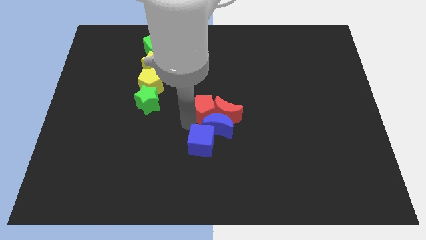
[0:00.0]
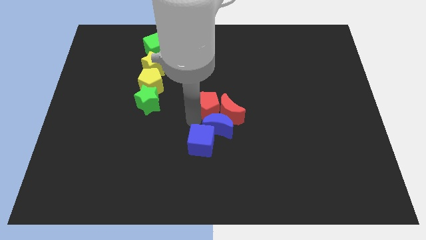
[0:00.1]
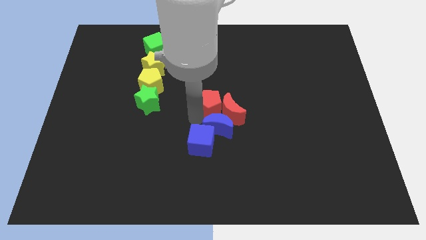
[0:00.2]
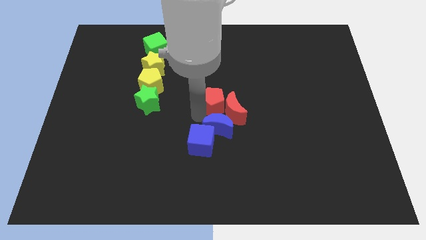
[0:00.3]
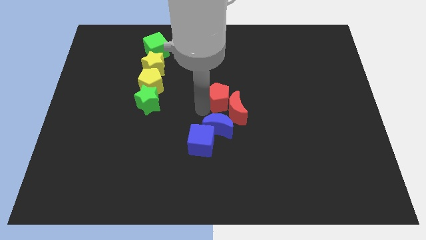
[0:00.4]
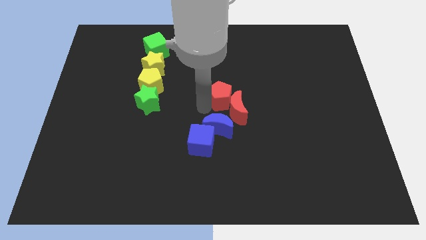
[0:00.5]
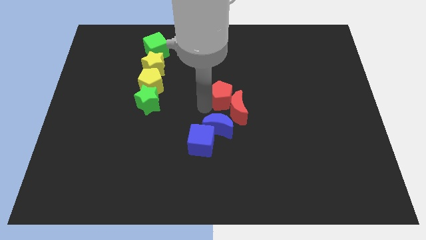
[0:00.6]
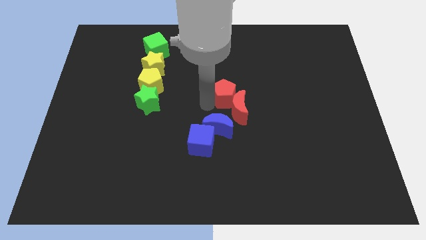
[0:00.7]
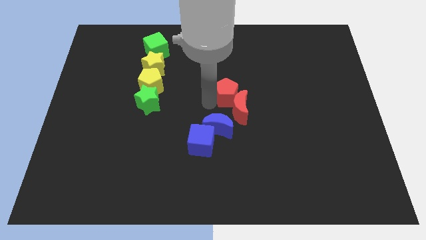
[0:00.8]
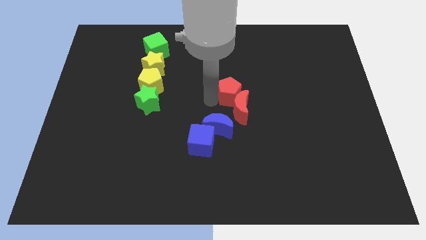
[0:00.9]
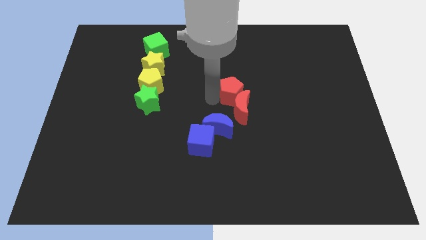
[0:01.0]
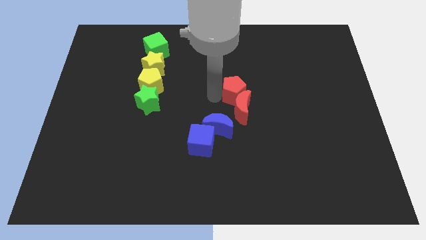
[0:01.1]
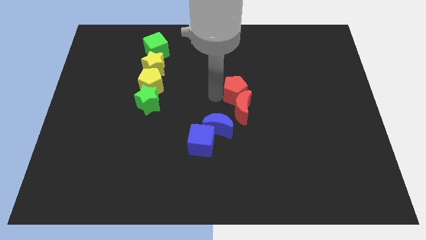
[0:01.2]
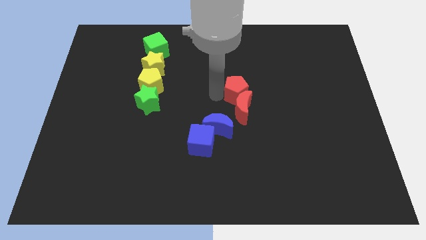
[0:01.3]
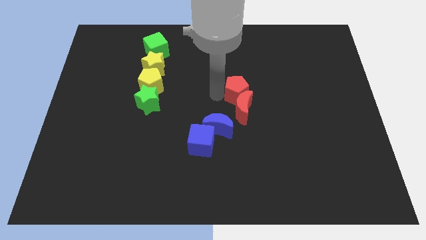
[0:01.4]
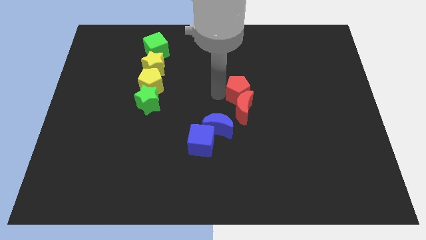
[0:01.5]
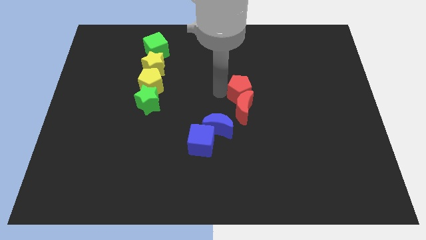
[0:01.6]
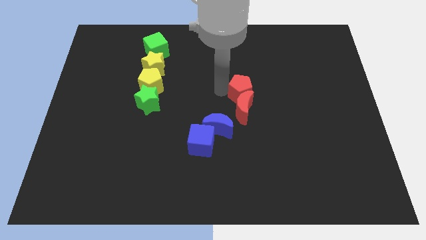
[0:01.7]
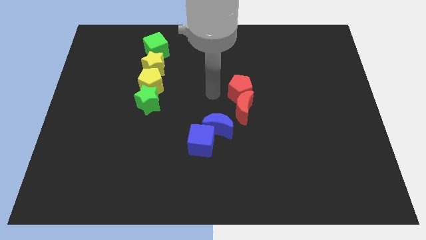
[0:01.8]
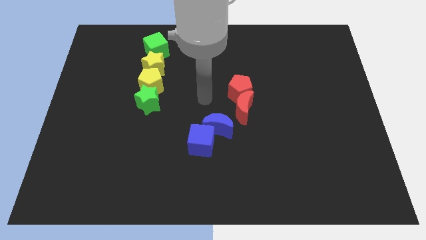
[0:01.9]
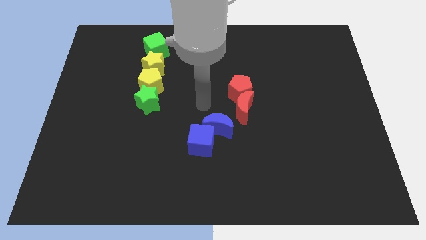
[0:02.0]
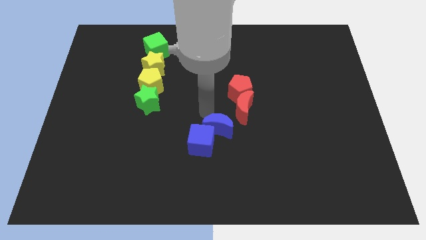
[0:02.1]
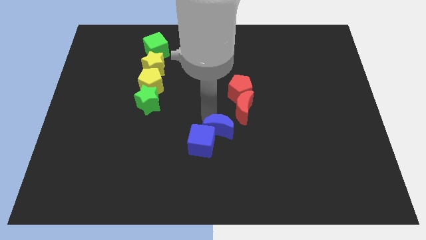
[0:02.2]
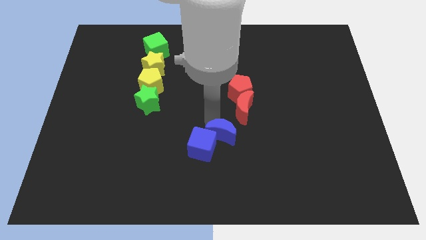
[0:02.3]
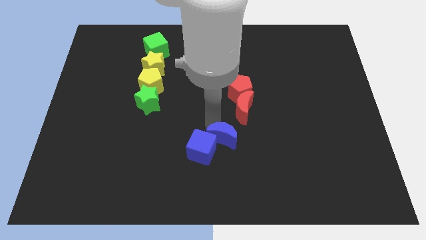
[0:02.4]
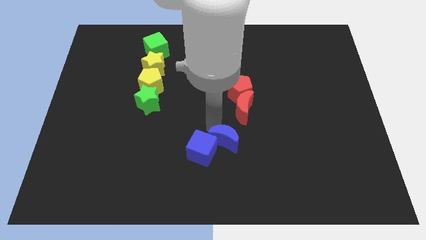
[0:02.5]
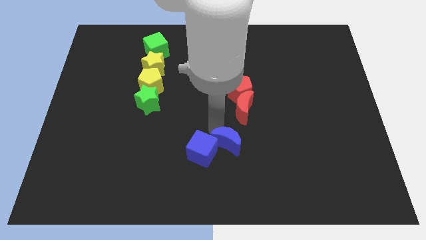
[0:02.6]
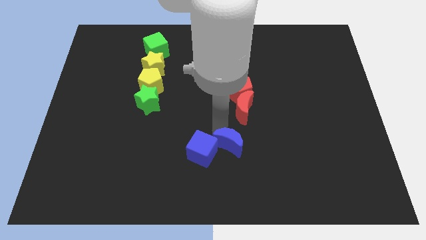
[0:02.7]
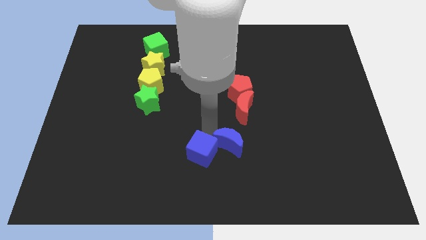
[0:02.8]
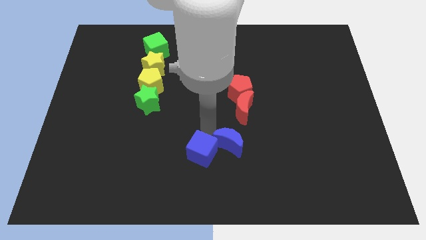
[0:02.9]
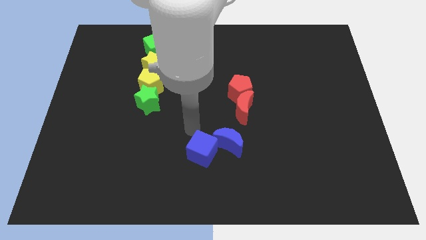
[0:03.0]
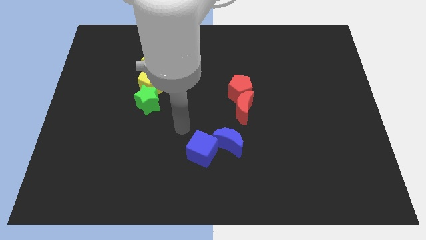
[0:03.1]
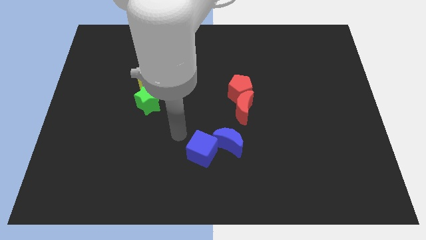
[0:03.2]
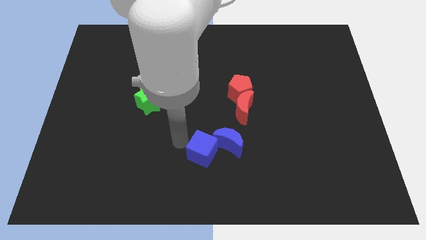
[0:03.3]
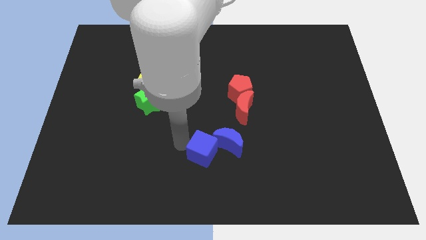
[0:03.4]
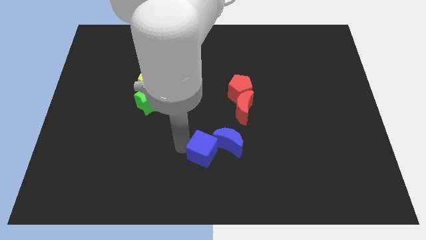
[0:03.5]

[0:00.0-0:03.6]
separate the red blocks from the blue blocks

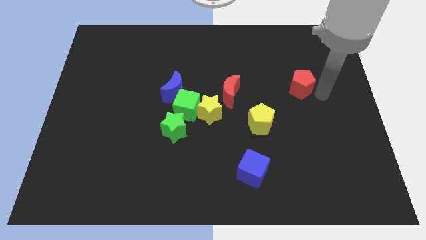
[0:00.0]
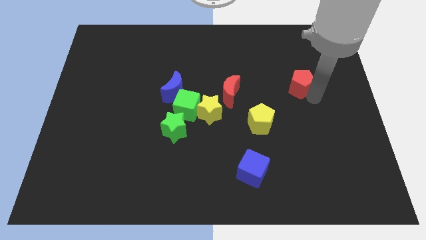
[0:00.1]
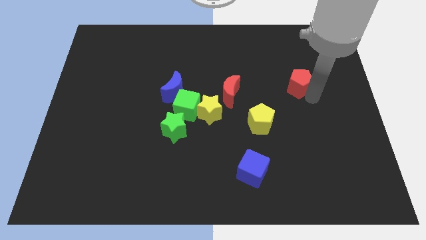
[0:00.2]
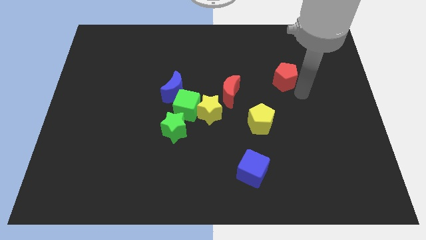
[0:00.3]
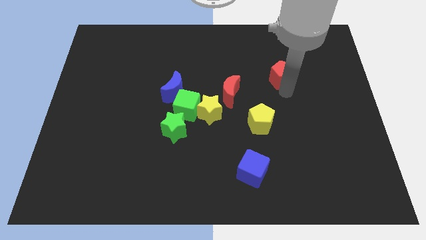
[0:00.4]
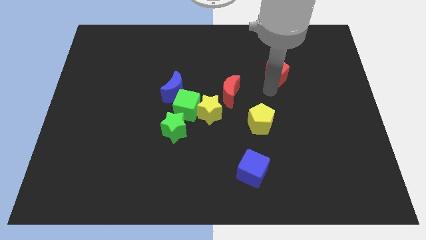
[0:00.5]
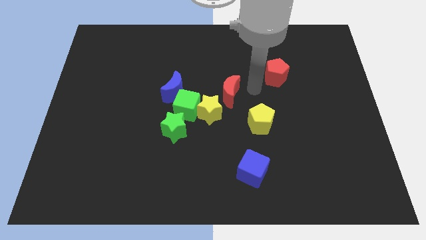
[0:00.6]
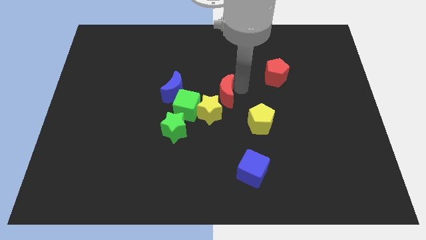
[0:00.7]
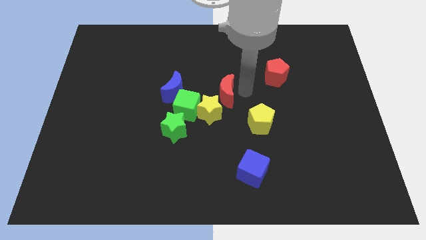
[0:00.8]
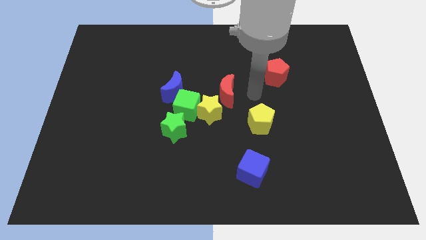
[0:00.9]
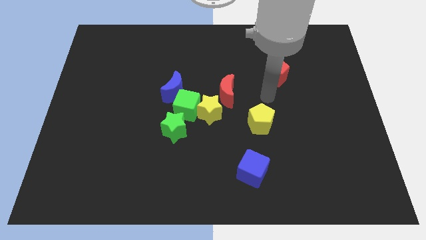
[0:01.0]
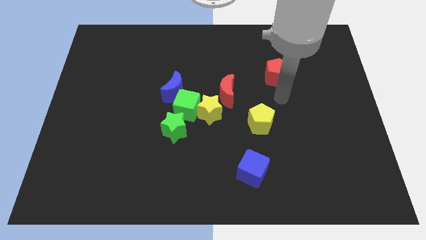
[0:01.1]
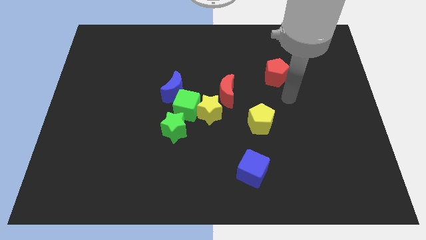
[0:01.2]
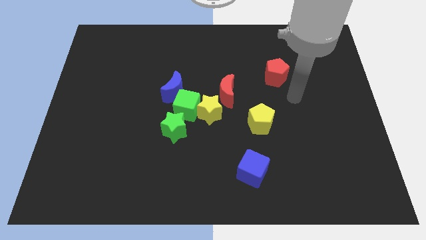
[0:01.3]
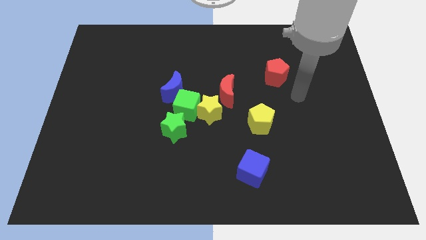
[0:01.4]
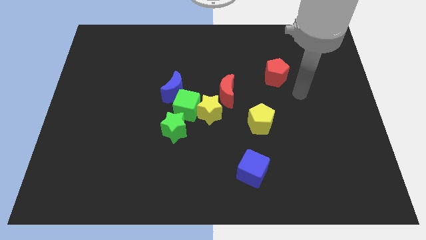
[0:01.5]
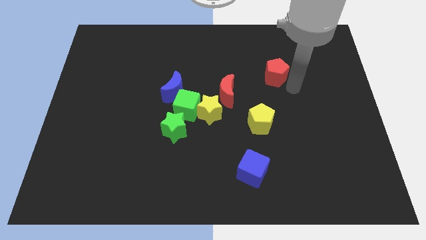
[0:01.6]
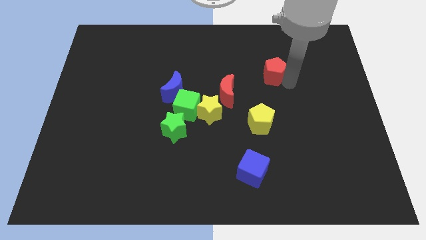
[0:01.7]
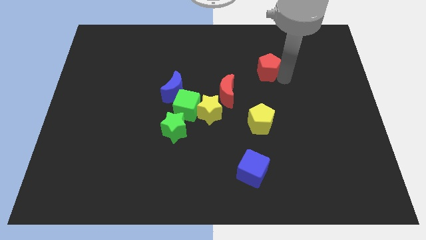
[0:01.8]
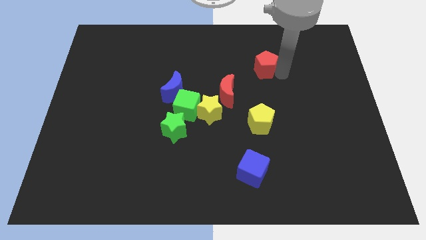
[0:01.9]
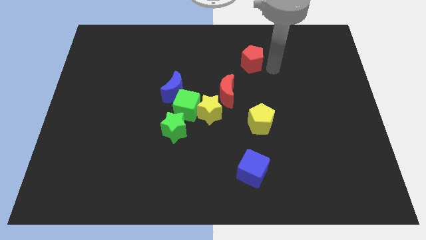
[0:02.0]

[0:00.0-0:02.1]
put the red pentagon vertically above the yellow pentagon

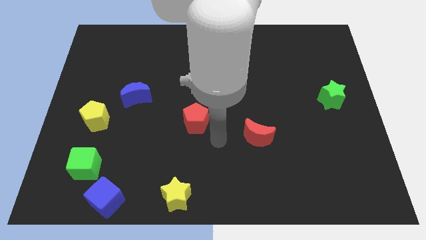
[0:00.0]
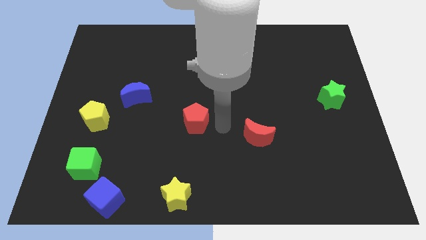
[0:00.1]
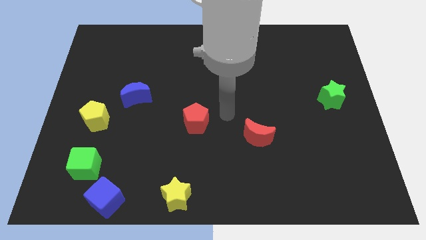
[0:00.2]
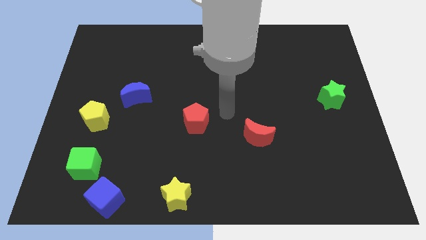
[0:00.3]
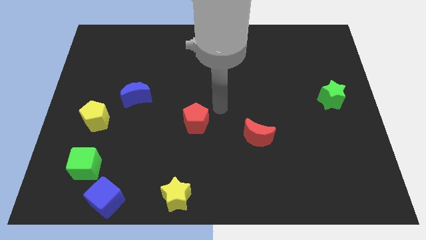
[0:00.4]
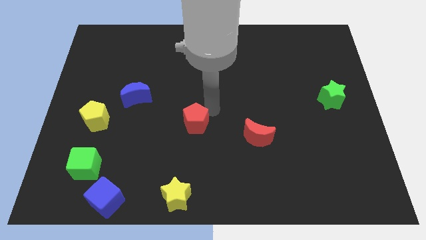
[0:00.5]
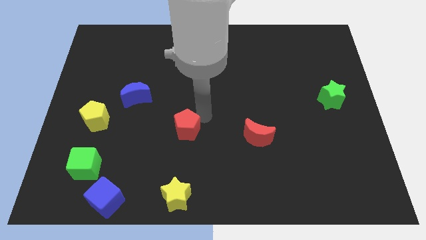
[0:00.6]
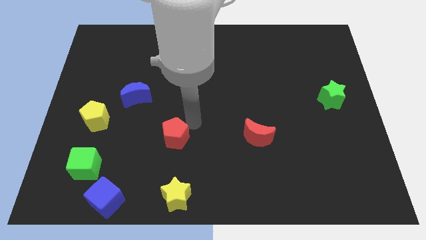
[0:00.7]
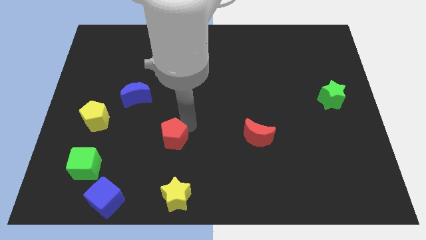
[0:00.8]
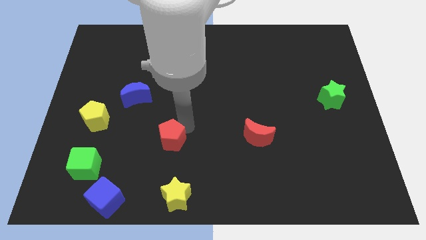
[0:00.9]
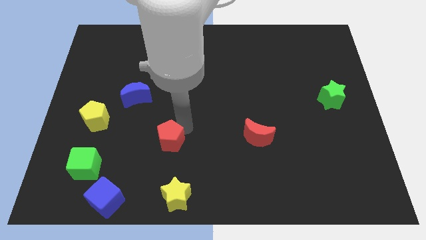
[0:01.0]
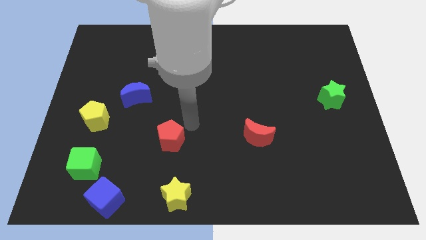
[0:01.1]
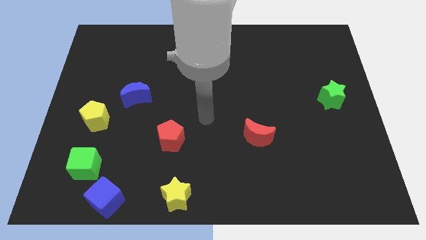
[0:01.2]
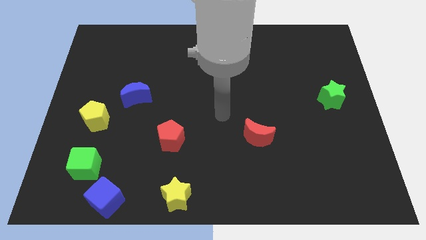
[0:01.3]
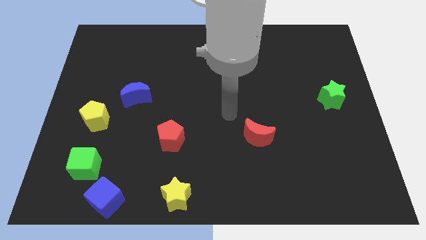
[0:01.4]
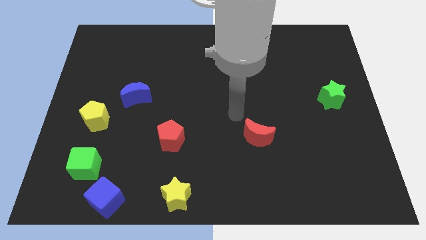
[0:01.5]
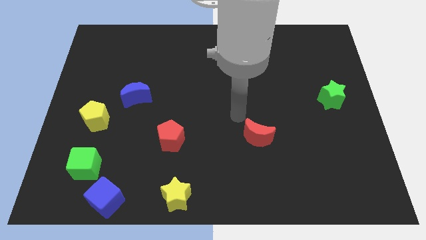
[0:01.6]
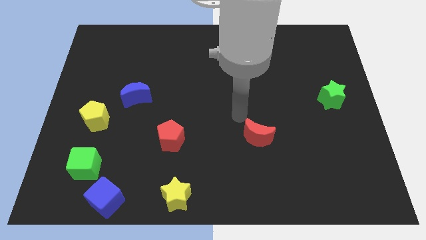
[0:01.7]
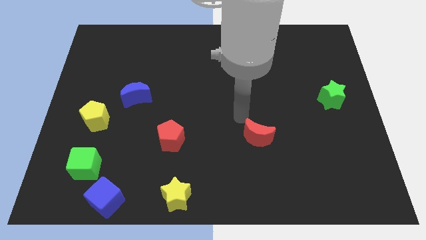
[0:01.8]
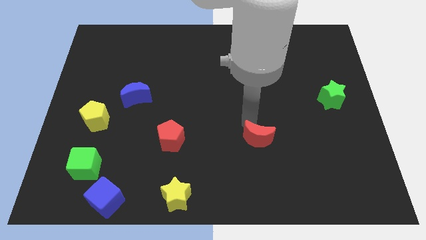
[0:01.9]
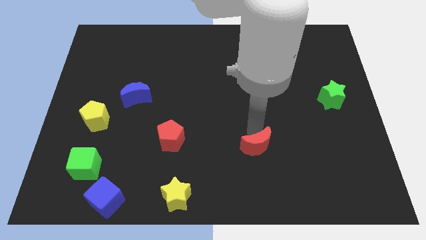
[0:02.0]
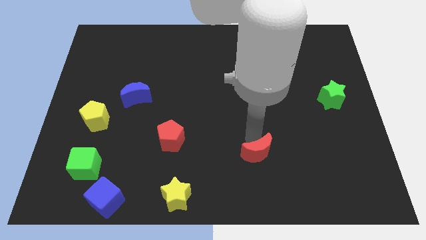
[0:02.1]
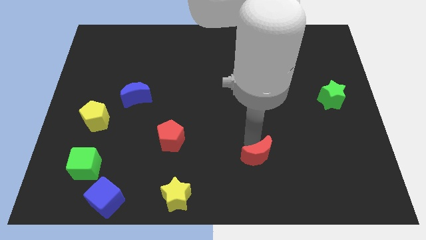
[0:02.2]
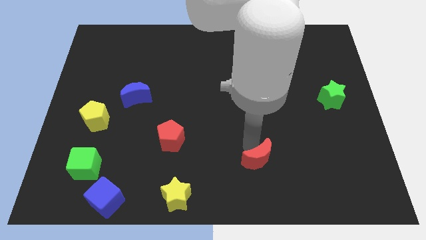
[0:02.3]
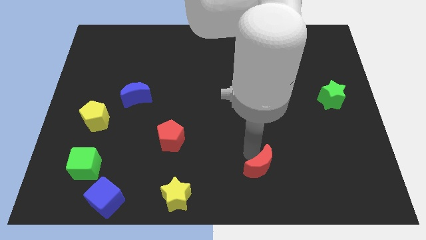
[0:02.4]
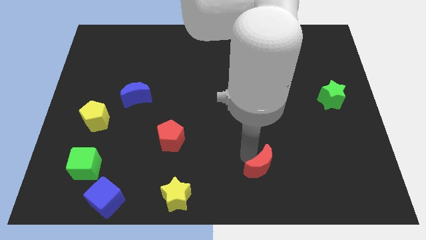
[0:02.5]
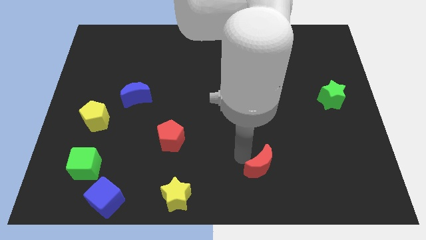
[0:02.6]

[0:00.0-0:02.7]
move the red crescent towards the bottom center of the board

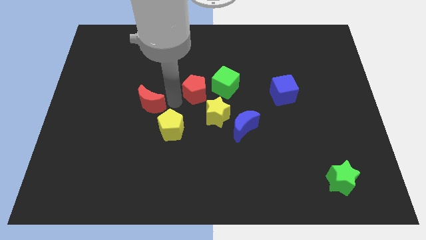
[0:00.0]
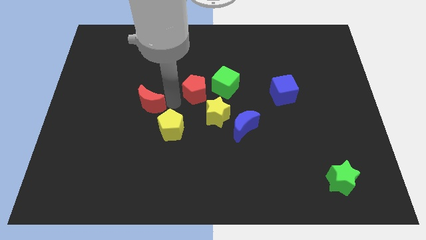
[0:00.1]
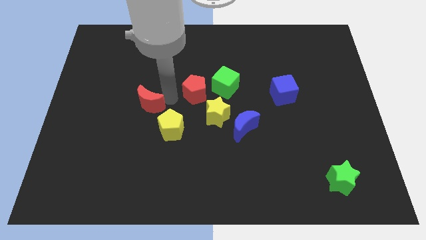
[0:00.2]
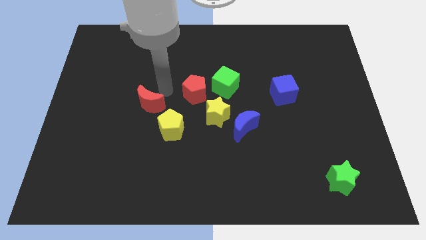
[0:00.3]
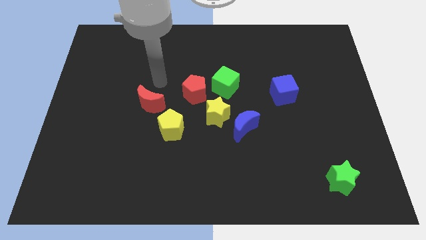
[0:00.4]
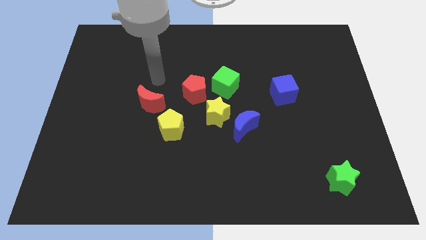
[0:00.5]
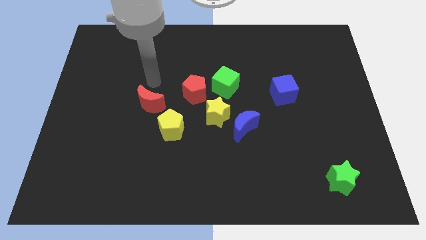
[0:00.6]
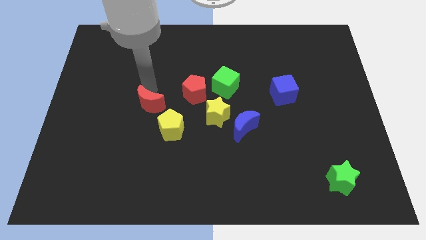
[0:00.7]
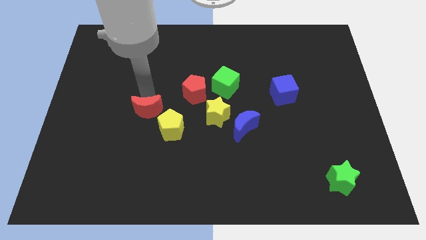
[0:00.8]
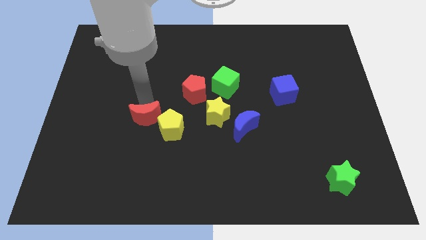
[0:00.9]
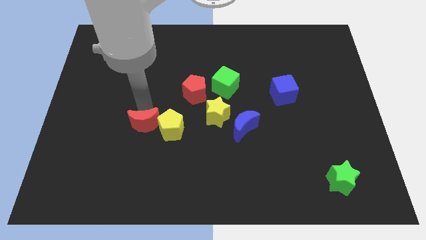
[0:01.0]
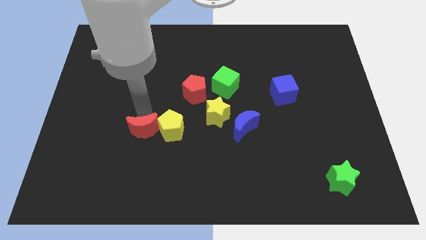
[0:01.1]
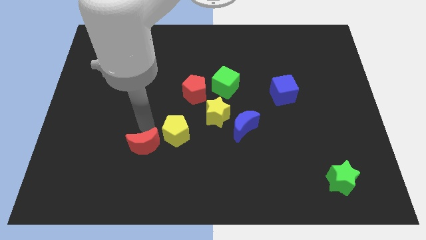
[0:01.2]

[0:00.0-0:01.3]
separate the rd crescent from red pentagon
